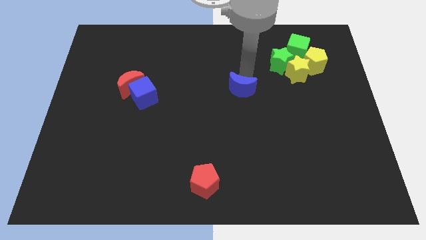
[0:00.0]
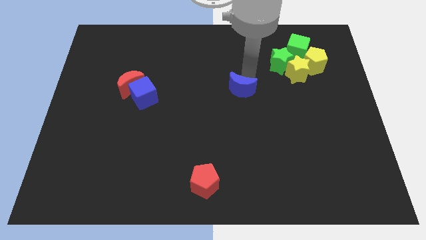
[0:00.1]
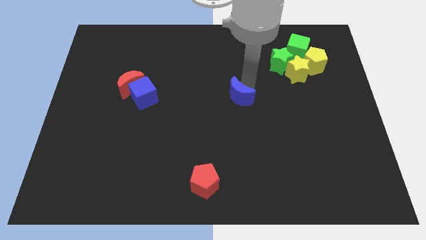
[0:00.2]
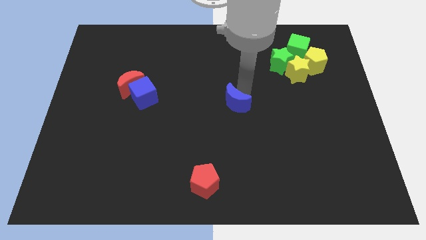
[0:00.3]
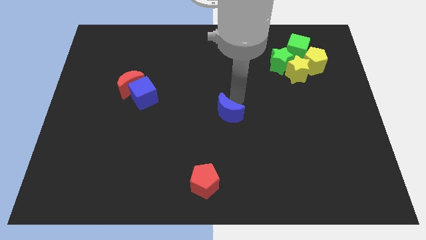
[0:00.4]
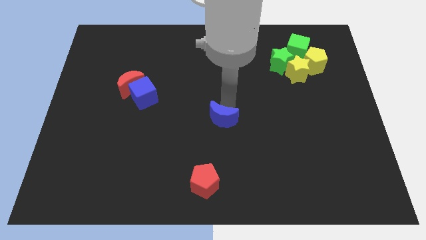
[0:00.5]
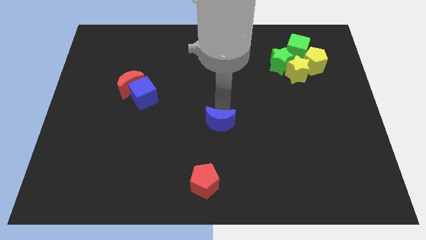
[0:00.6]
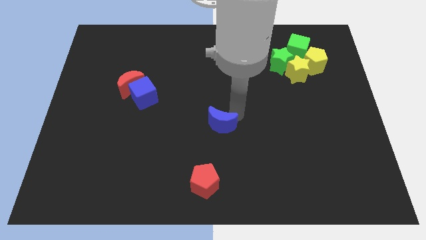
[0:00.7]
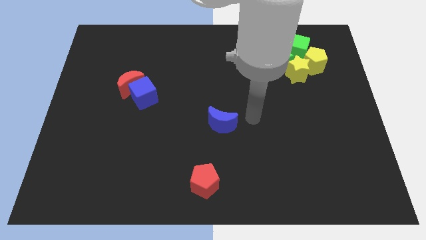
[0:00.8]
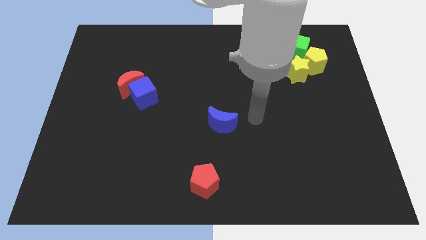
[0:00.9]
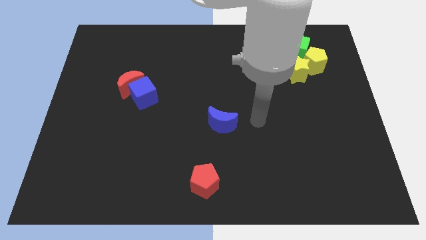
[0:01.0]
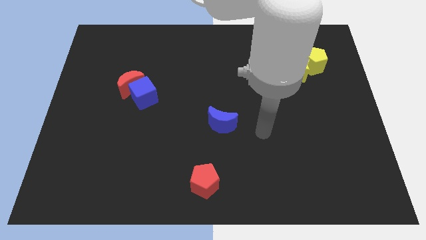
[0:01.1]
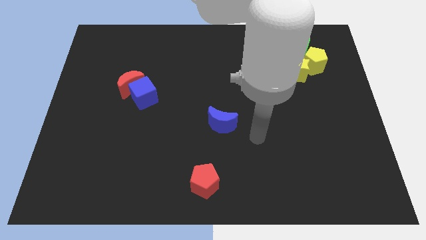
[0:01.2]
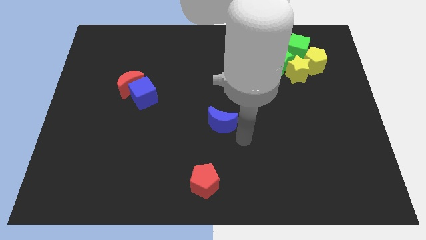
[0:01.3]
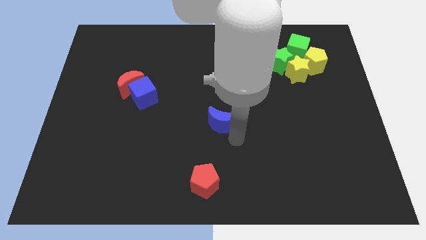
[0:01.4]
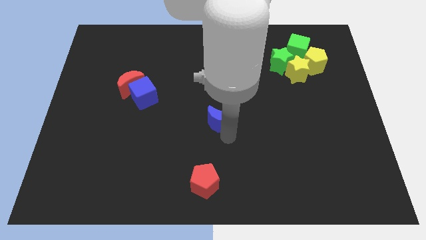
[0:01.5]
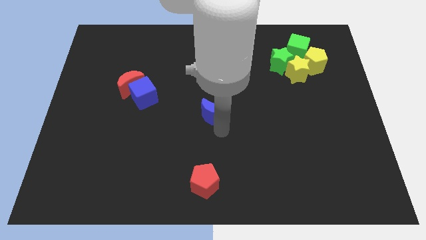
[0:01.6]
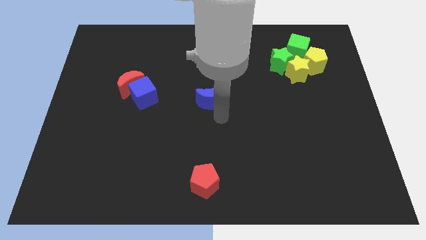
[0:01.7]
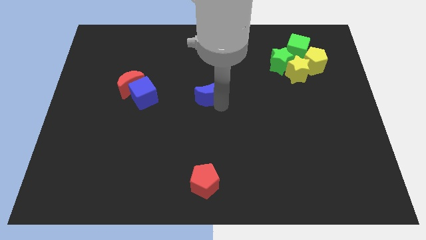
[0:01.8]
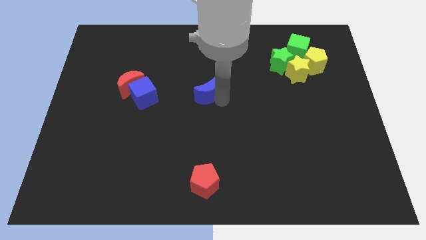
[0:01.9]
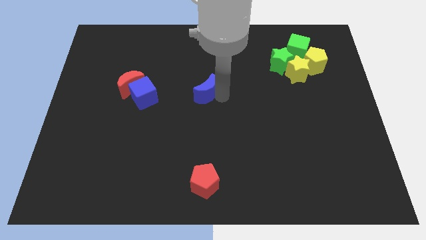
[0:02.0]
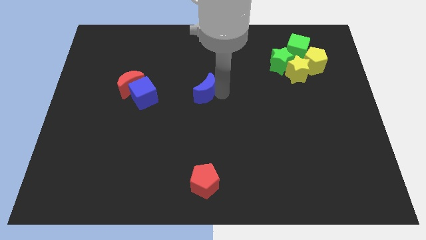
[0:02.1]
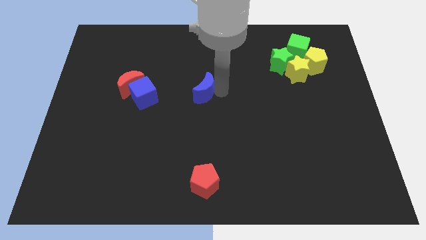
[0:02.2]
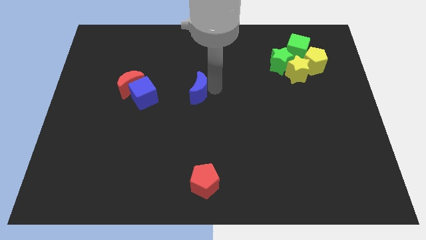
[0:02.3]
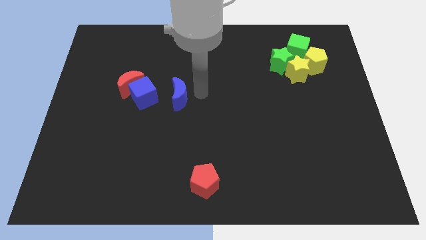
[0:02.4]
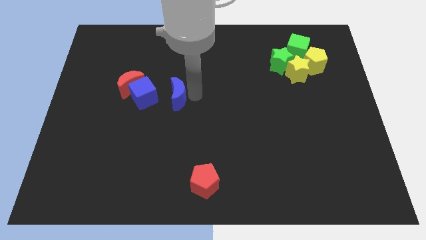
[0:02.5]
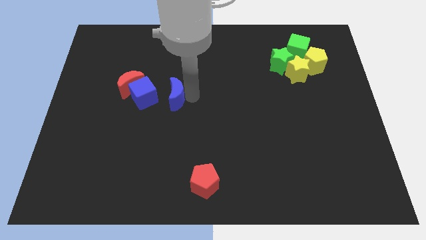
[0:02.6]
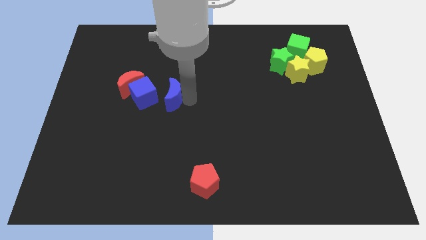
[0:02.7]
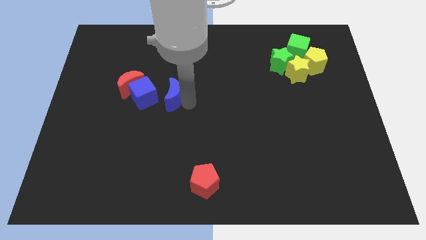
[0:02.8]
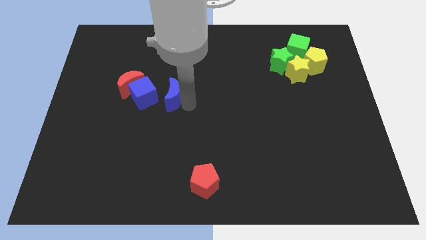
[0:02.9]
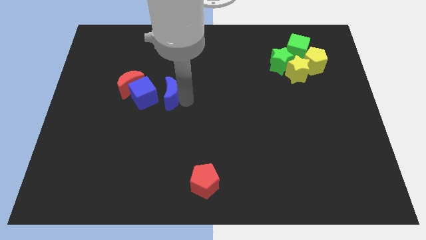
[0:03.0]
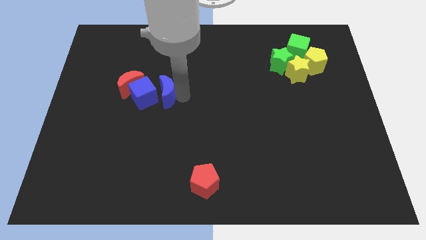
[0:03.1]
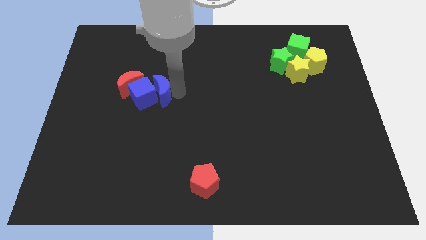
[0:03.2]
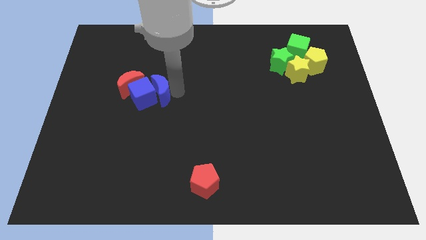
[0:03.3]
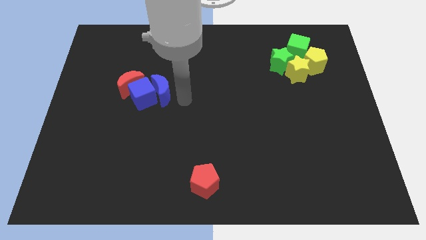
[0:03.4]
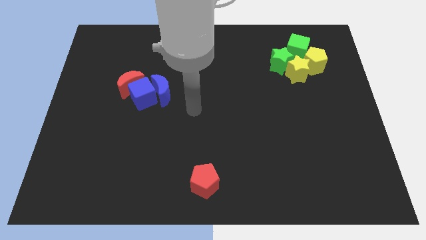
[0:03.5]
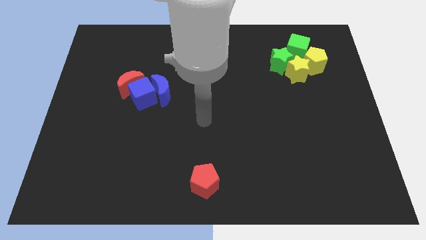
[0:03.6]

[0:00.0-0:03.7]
push the blue crescent to the right of the blue cube

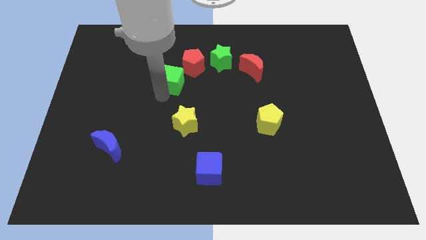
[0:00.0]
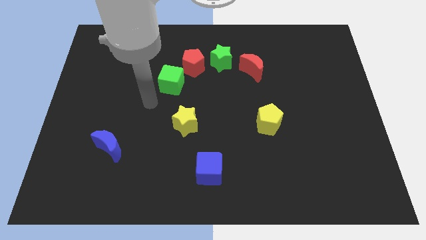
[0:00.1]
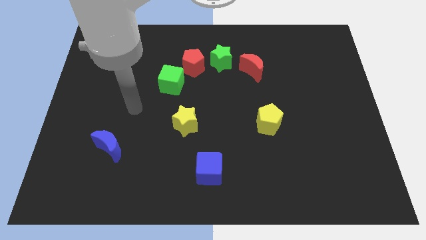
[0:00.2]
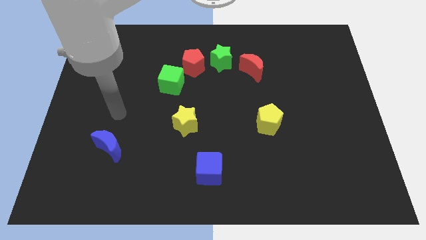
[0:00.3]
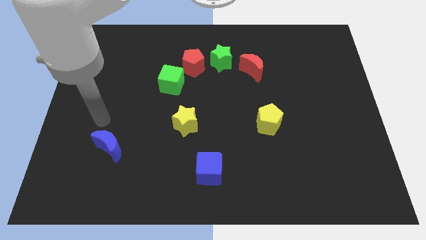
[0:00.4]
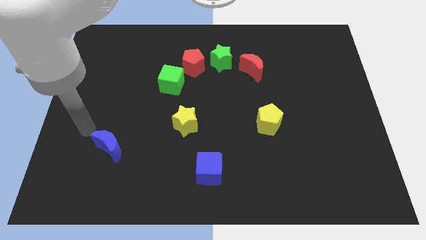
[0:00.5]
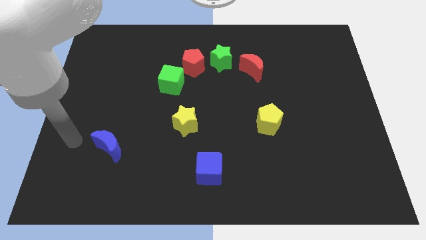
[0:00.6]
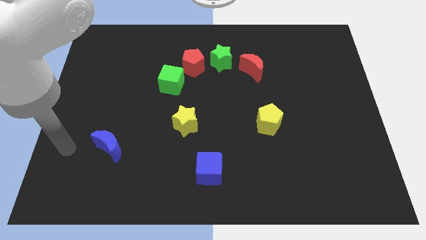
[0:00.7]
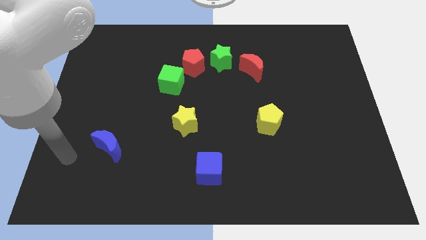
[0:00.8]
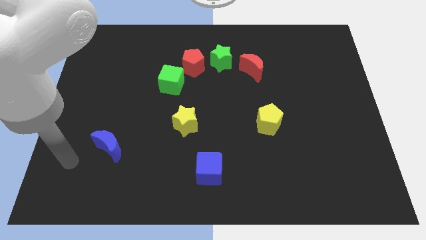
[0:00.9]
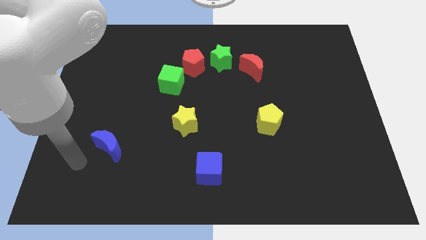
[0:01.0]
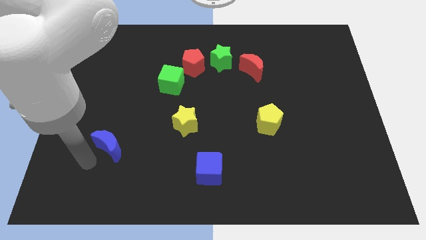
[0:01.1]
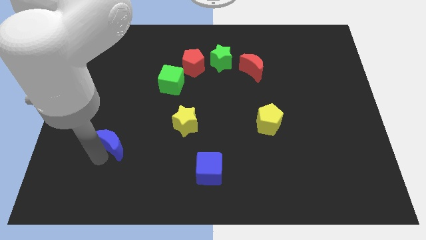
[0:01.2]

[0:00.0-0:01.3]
move your arm away from the green cube

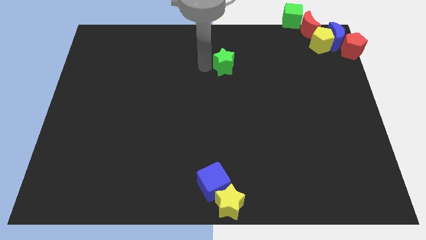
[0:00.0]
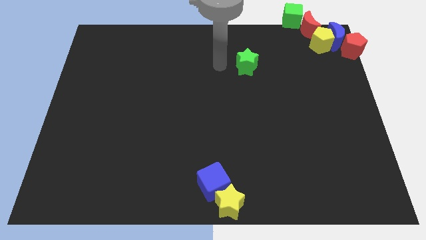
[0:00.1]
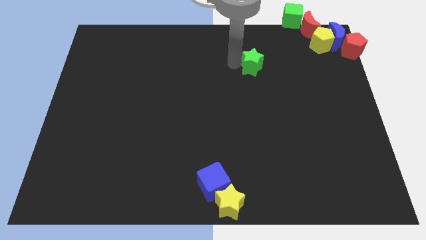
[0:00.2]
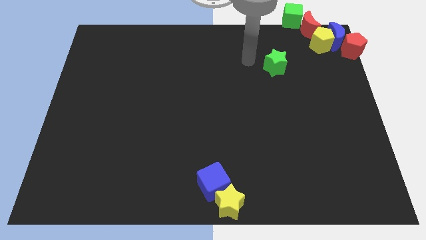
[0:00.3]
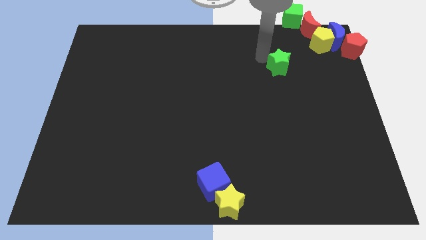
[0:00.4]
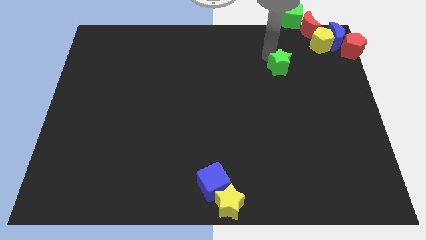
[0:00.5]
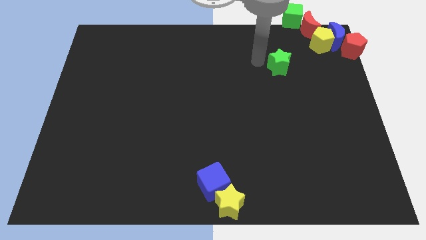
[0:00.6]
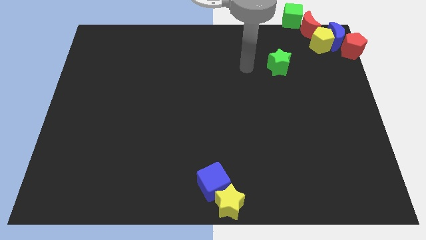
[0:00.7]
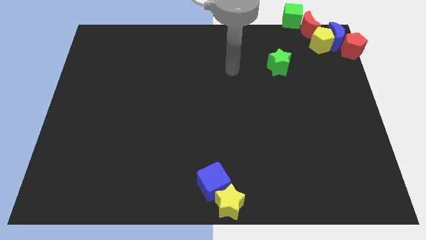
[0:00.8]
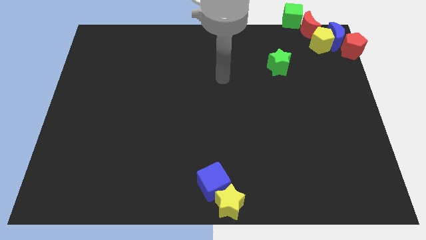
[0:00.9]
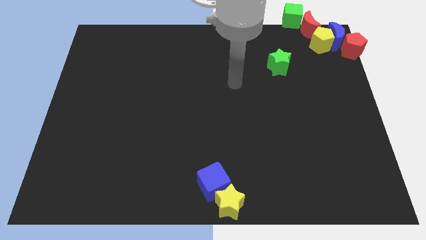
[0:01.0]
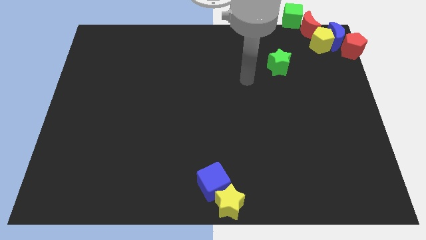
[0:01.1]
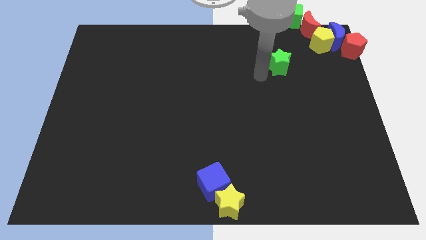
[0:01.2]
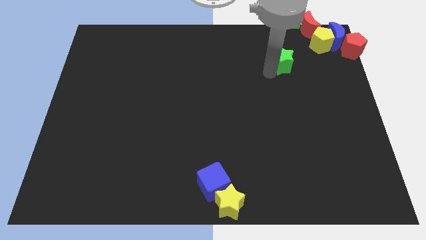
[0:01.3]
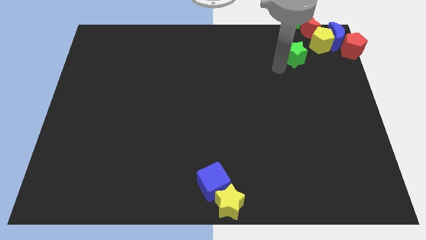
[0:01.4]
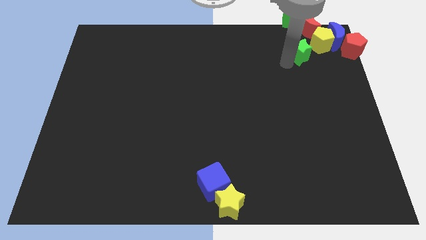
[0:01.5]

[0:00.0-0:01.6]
move the green star to the bottom left side of the yellow pentagon

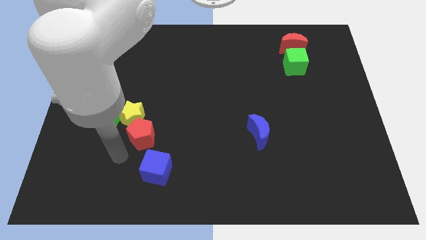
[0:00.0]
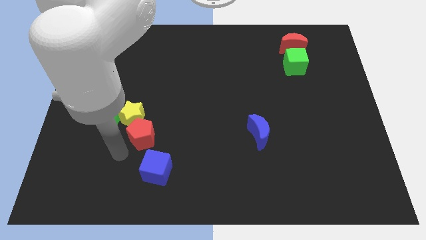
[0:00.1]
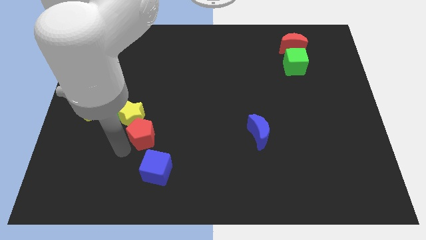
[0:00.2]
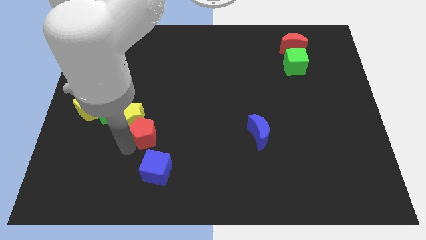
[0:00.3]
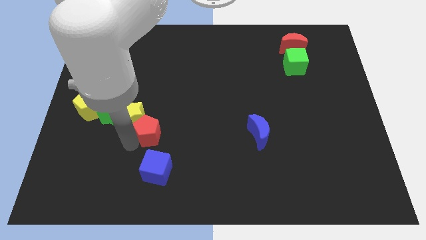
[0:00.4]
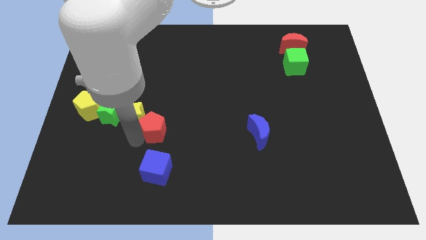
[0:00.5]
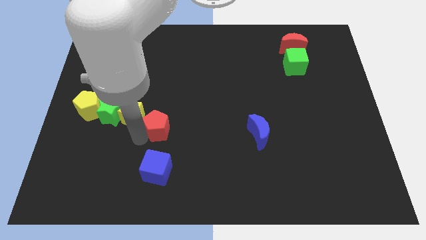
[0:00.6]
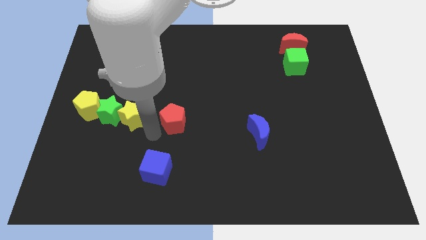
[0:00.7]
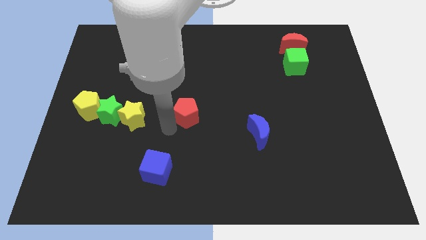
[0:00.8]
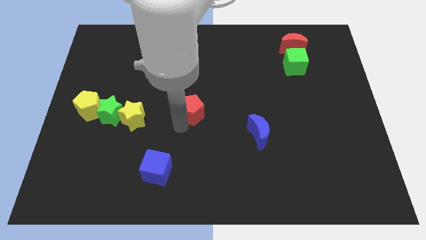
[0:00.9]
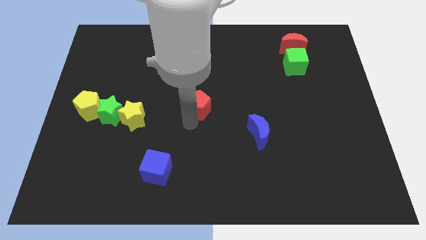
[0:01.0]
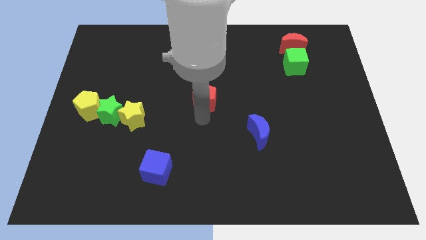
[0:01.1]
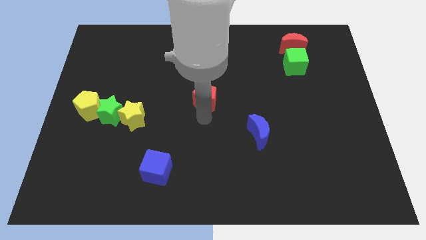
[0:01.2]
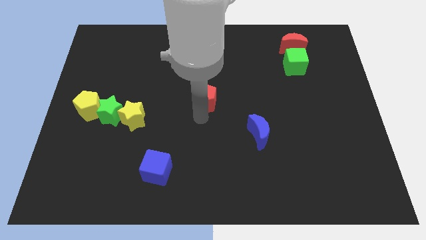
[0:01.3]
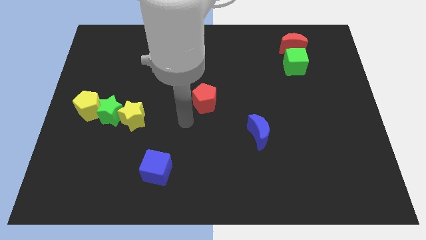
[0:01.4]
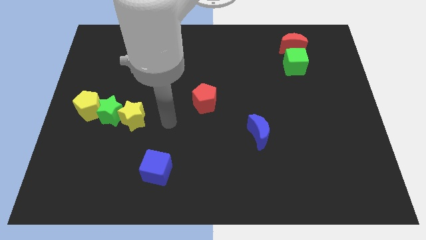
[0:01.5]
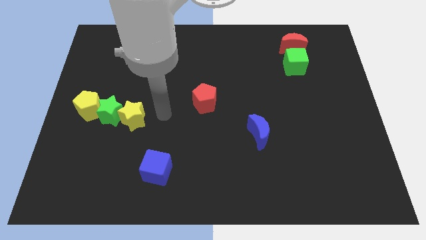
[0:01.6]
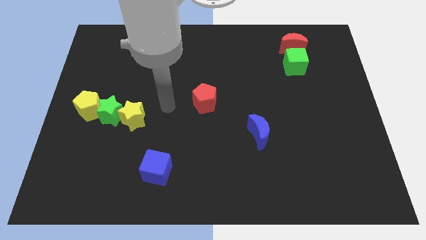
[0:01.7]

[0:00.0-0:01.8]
put the red pentagon at the center of the board

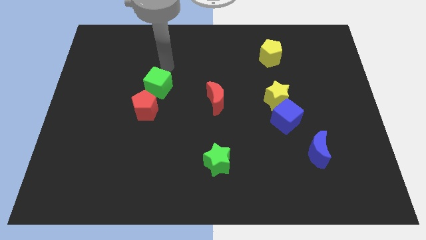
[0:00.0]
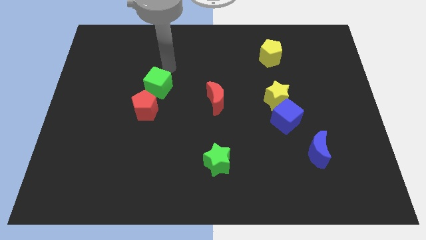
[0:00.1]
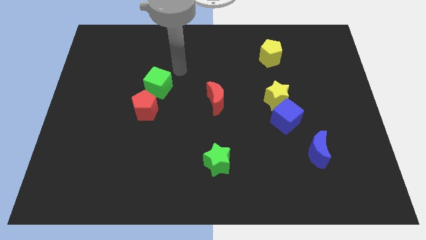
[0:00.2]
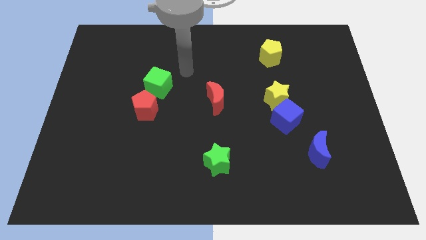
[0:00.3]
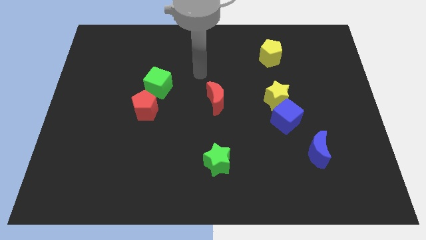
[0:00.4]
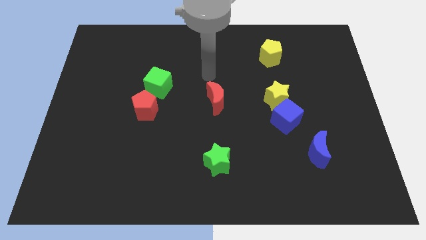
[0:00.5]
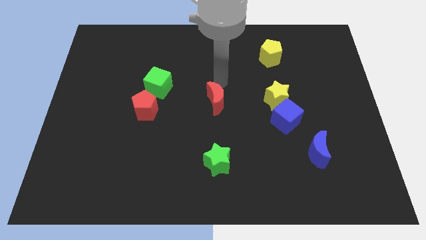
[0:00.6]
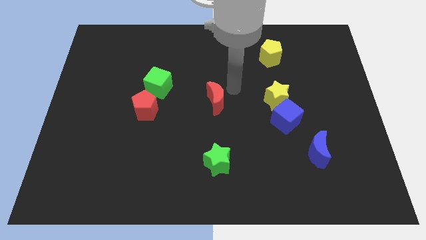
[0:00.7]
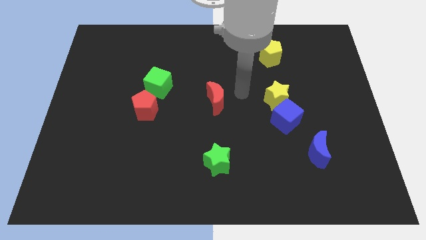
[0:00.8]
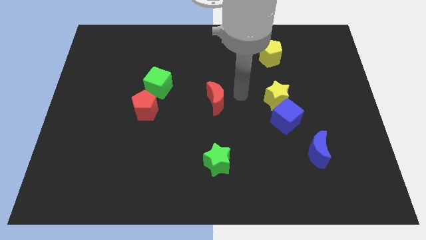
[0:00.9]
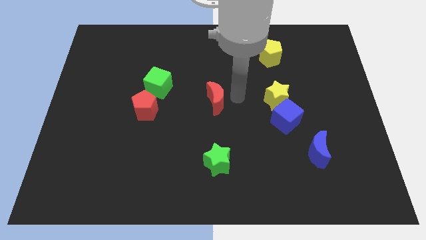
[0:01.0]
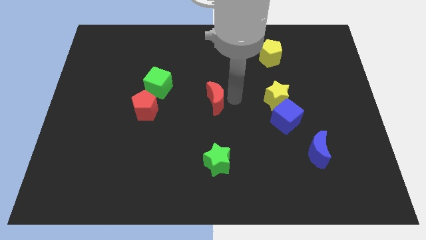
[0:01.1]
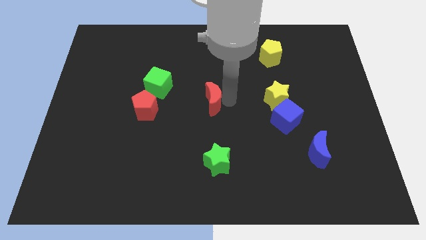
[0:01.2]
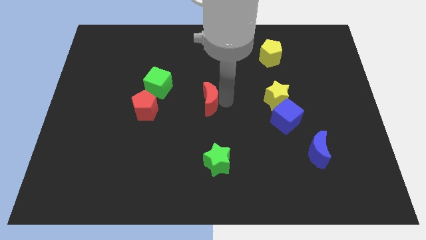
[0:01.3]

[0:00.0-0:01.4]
tap the right side of the red crescent
